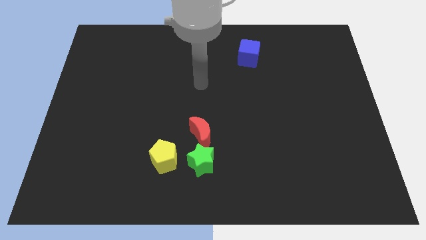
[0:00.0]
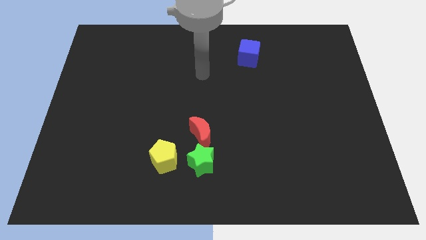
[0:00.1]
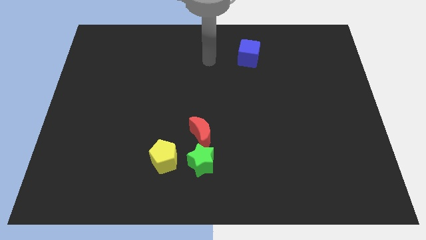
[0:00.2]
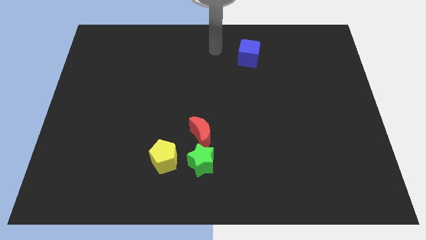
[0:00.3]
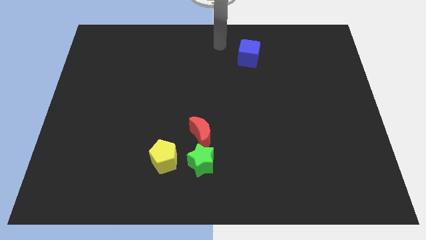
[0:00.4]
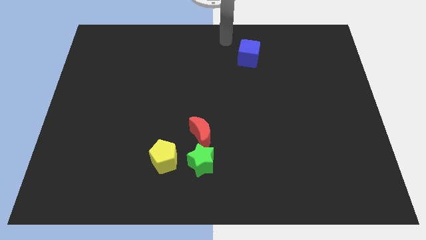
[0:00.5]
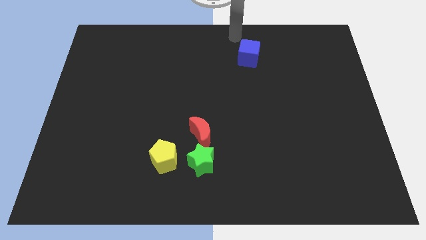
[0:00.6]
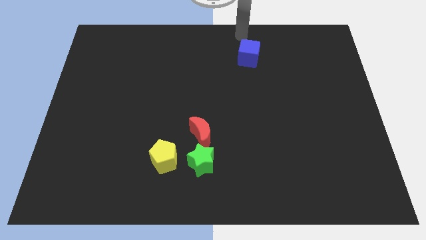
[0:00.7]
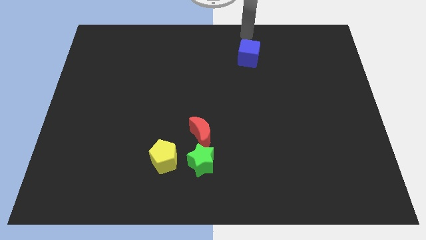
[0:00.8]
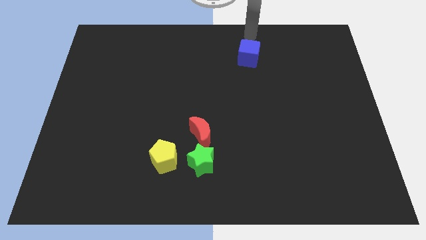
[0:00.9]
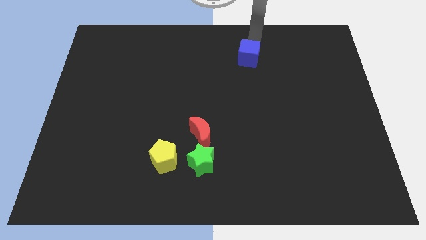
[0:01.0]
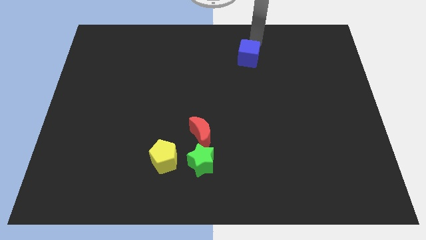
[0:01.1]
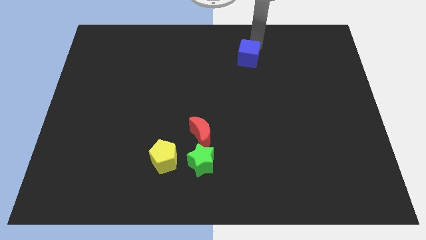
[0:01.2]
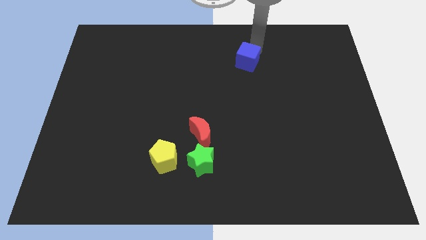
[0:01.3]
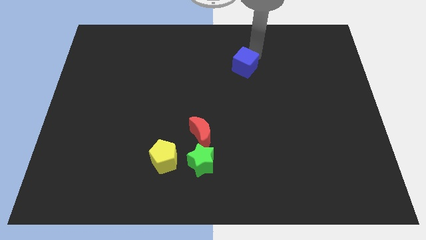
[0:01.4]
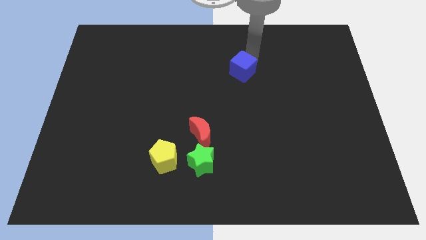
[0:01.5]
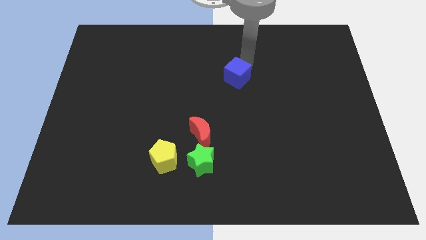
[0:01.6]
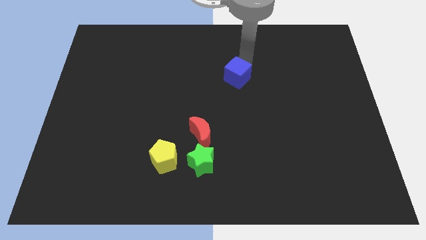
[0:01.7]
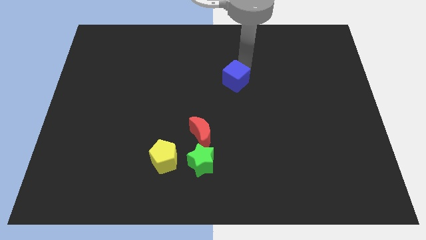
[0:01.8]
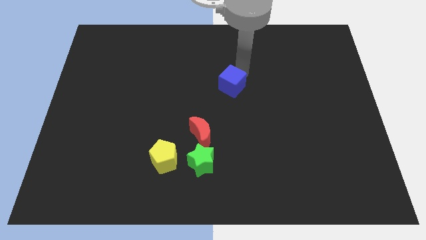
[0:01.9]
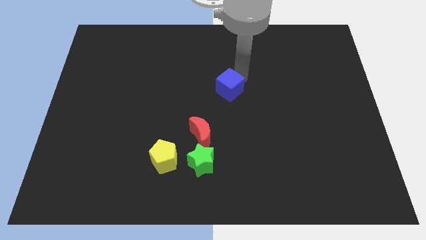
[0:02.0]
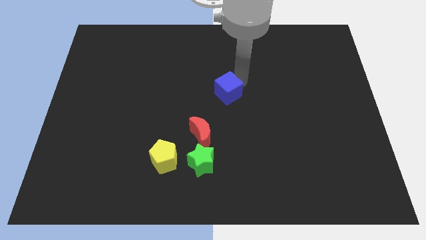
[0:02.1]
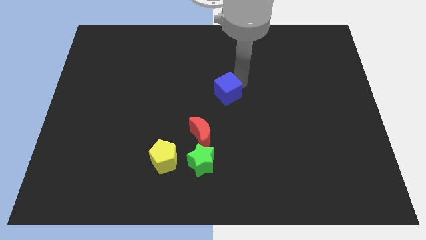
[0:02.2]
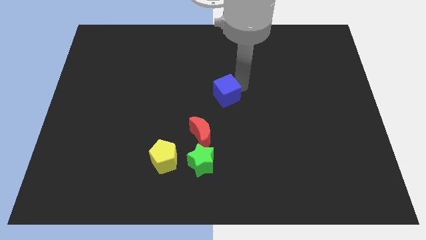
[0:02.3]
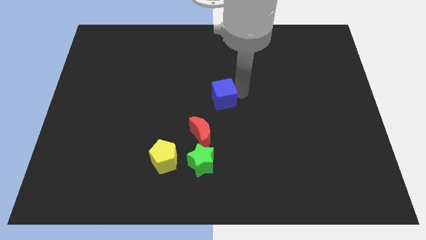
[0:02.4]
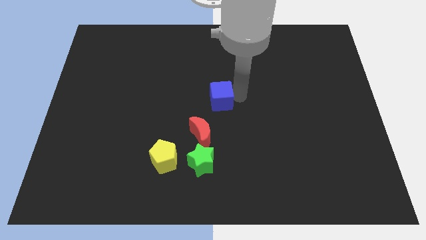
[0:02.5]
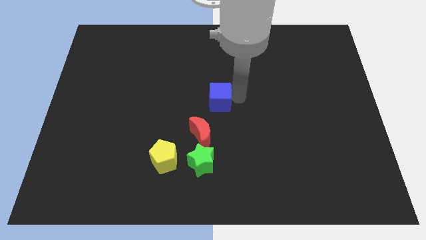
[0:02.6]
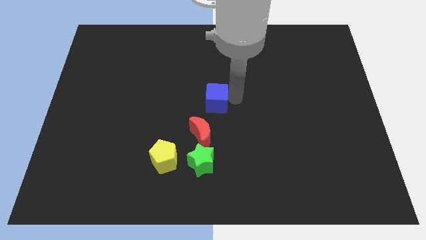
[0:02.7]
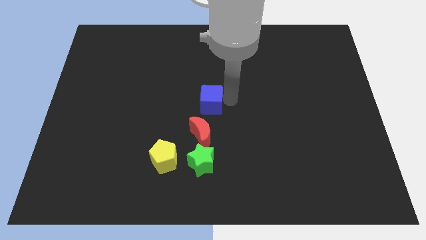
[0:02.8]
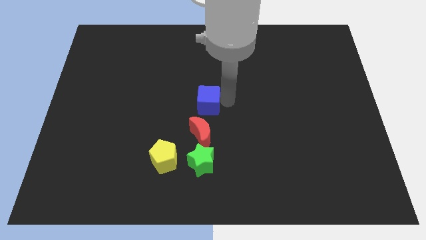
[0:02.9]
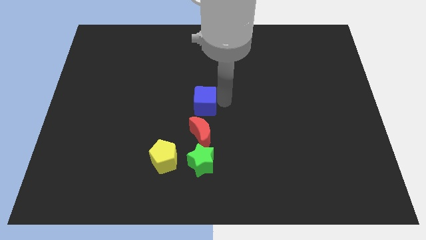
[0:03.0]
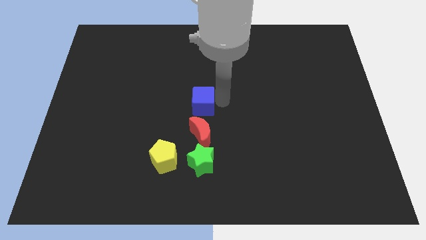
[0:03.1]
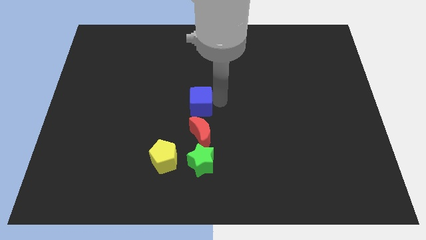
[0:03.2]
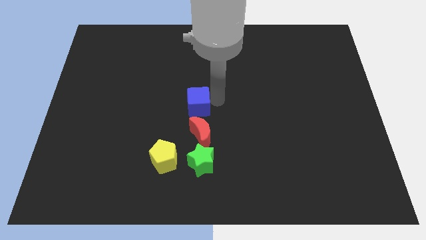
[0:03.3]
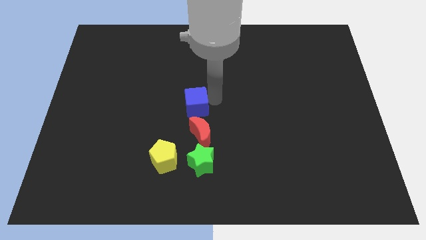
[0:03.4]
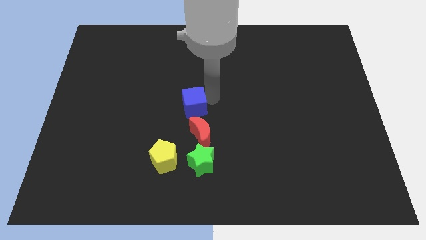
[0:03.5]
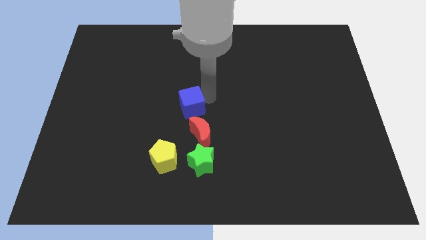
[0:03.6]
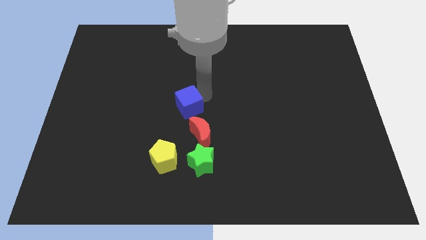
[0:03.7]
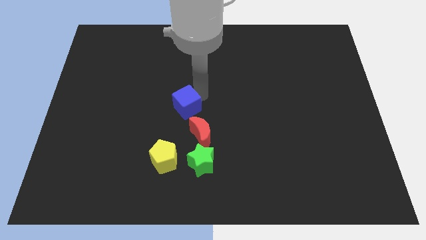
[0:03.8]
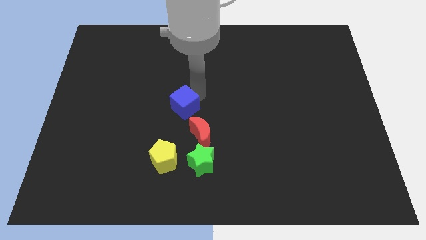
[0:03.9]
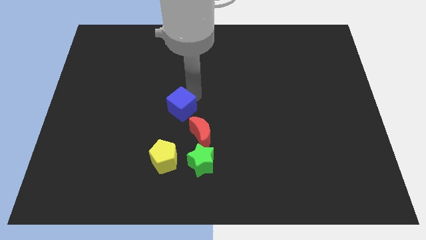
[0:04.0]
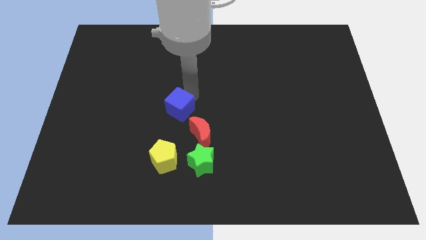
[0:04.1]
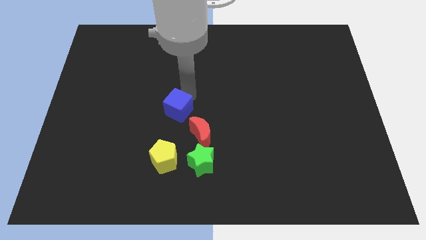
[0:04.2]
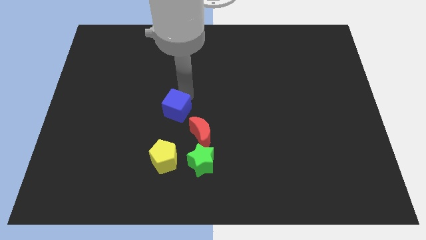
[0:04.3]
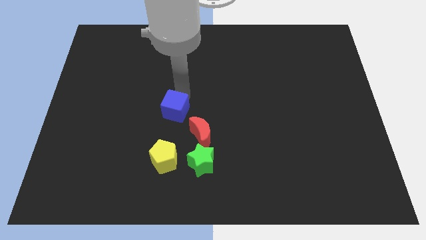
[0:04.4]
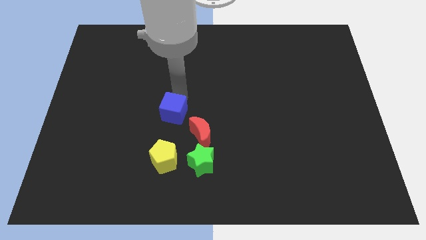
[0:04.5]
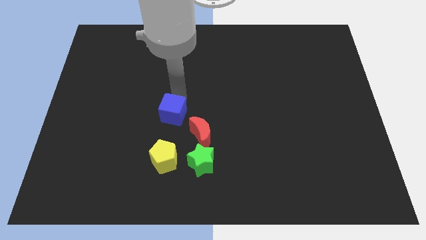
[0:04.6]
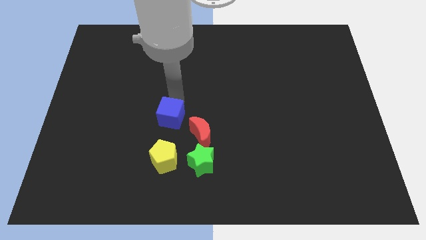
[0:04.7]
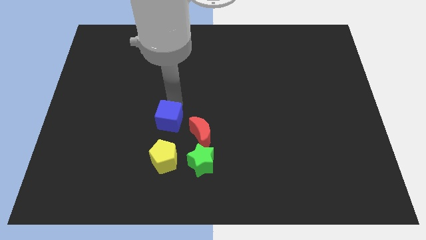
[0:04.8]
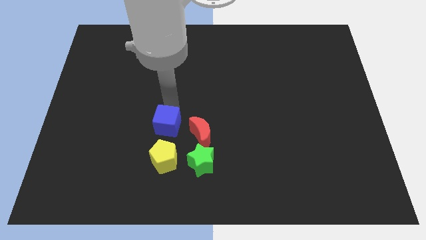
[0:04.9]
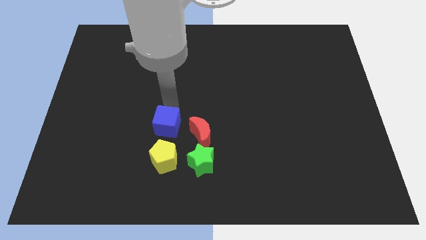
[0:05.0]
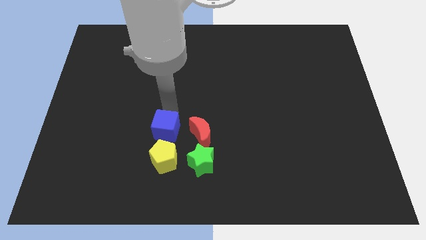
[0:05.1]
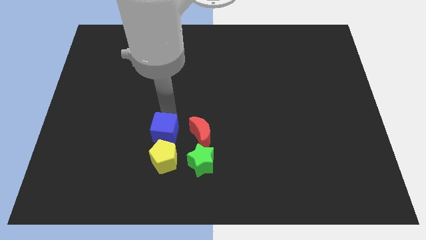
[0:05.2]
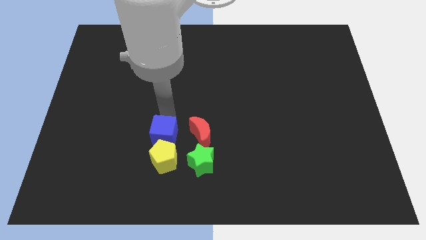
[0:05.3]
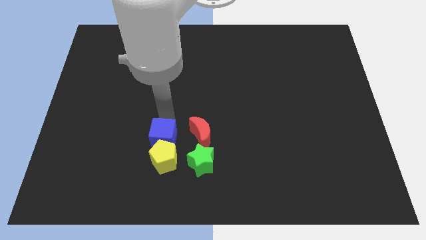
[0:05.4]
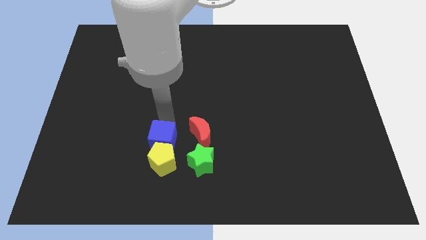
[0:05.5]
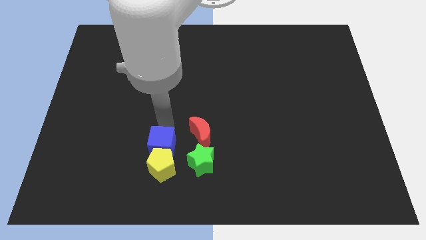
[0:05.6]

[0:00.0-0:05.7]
slide the blue block close to the yellow block

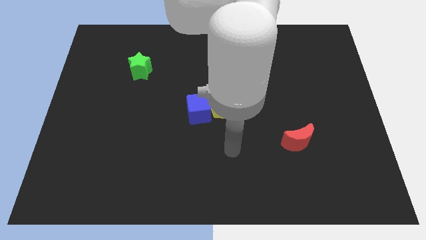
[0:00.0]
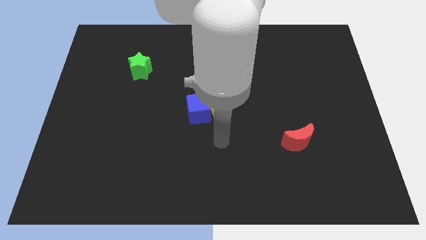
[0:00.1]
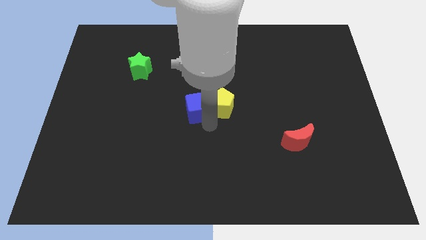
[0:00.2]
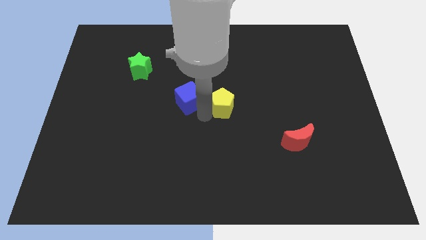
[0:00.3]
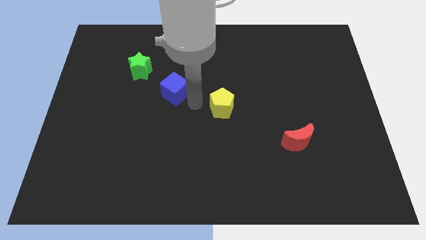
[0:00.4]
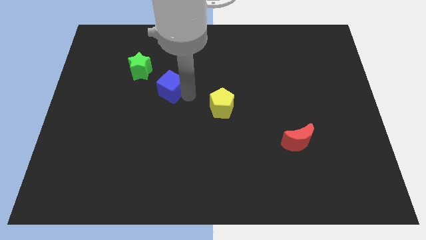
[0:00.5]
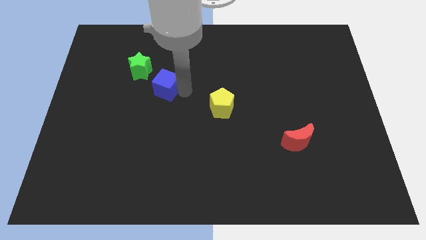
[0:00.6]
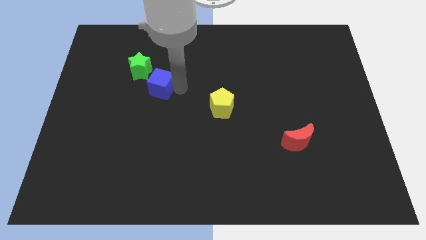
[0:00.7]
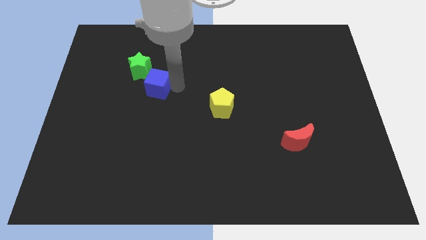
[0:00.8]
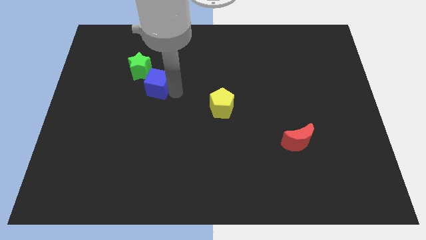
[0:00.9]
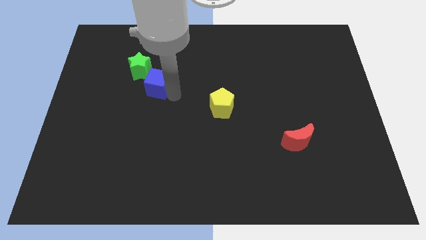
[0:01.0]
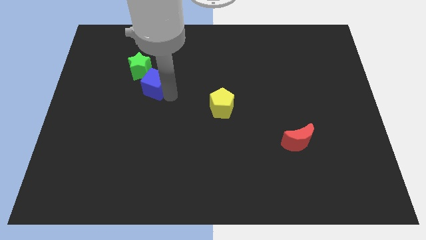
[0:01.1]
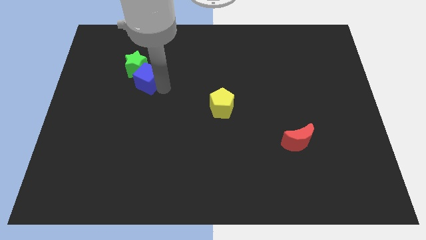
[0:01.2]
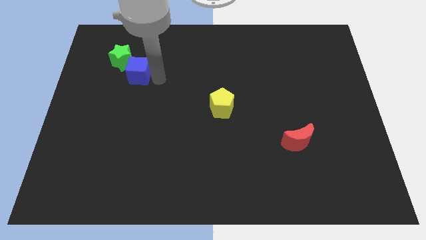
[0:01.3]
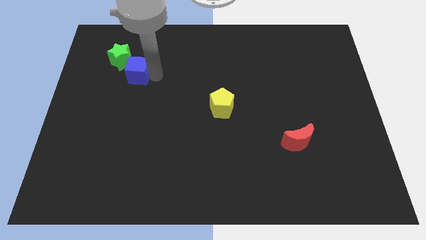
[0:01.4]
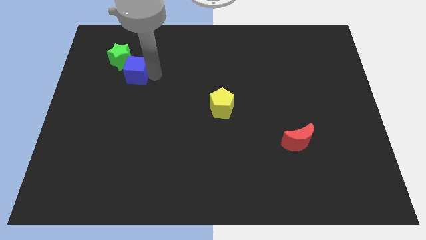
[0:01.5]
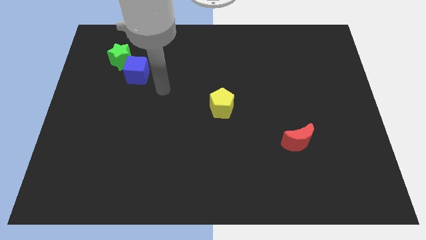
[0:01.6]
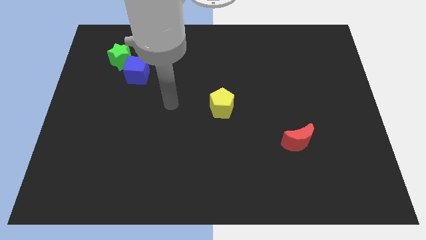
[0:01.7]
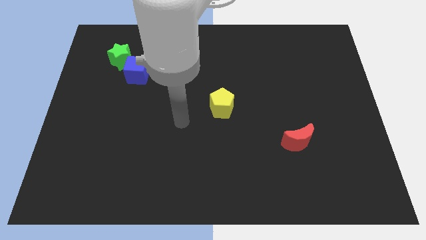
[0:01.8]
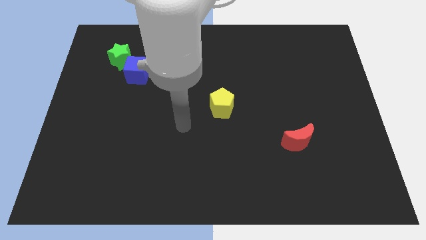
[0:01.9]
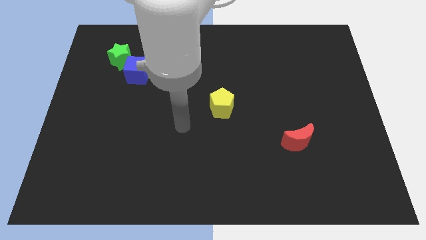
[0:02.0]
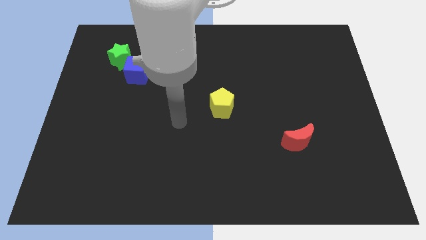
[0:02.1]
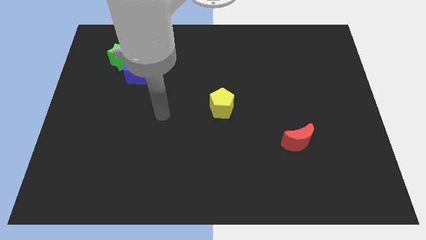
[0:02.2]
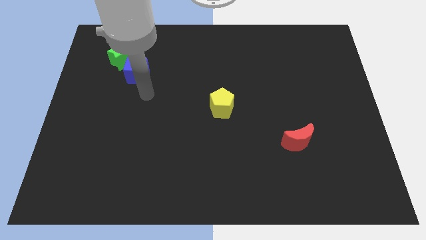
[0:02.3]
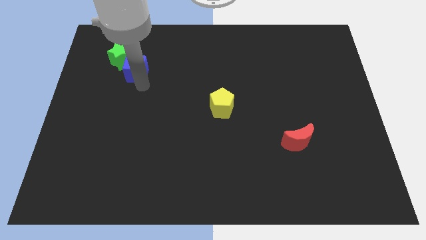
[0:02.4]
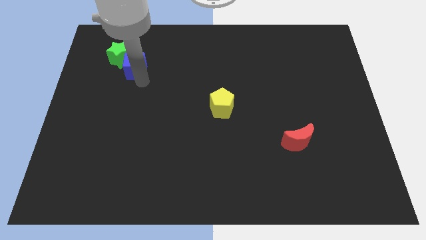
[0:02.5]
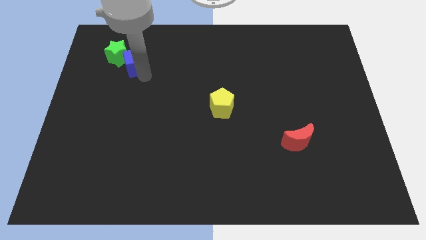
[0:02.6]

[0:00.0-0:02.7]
slide the cube next to the green block

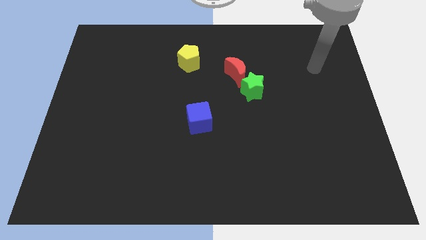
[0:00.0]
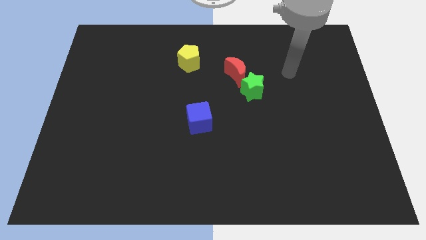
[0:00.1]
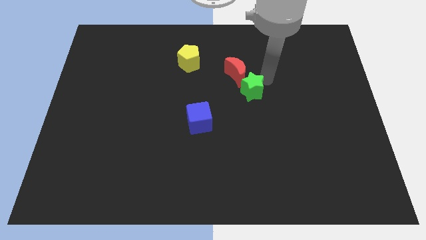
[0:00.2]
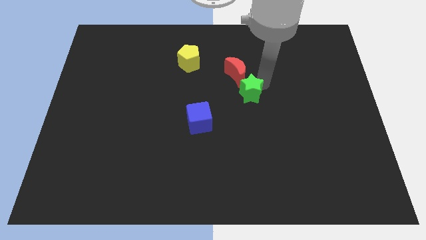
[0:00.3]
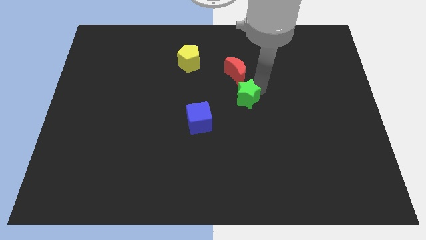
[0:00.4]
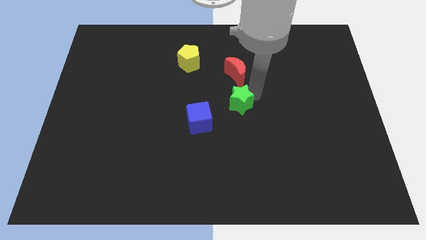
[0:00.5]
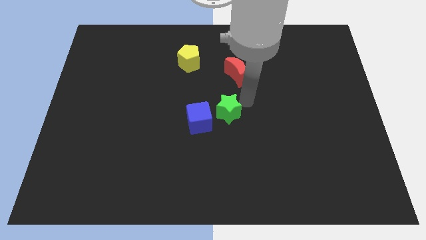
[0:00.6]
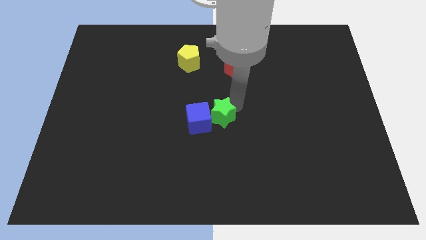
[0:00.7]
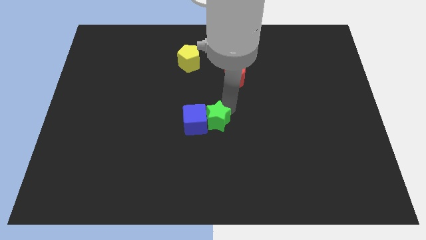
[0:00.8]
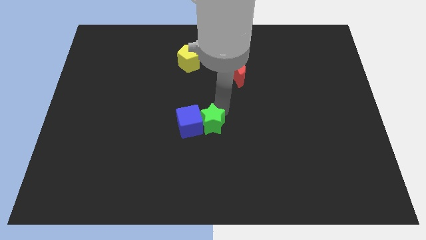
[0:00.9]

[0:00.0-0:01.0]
push the green block to the cube
